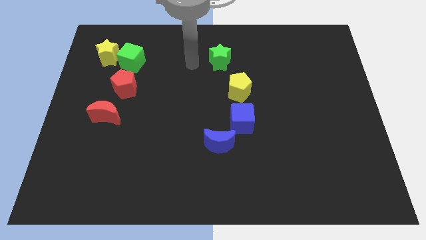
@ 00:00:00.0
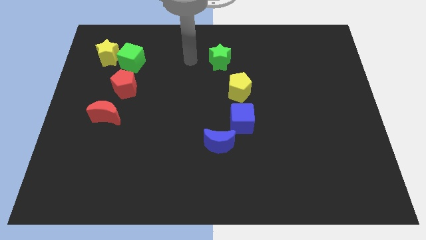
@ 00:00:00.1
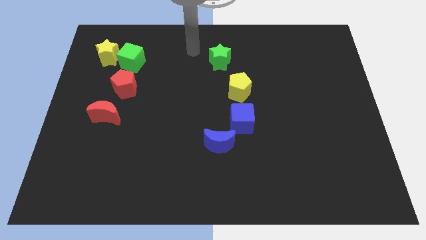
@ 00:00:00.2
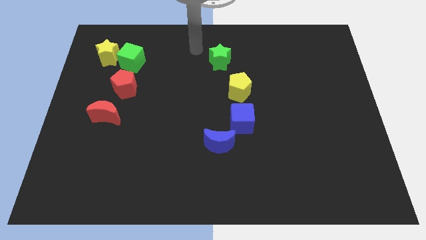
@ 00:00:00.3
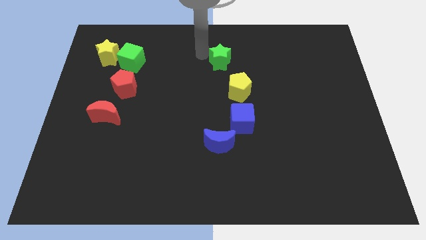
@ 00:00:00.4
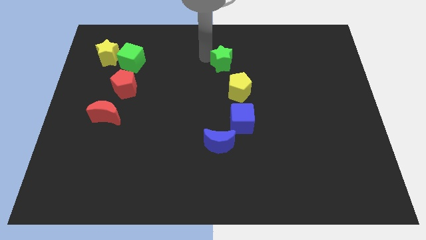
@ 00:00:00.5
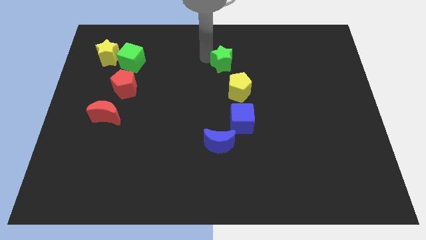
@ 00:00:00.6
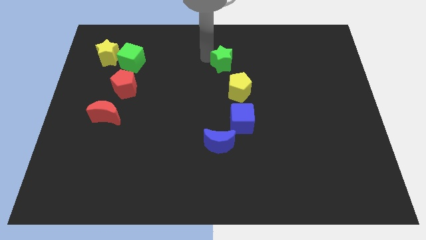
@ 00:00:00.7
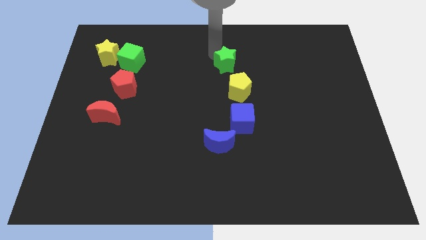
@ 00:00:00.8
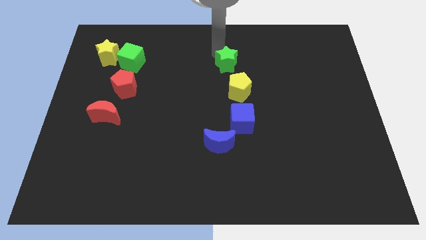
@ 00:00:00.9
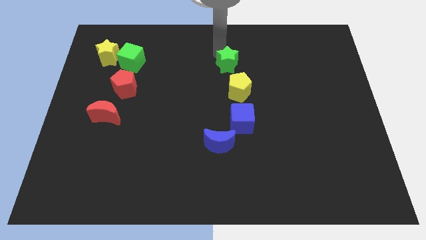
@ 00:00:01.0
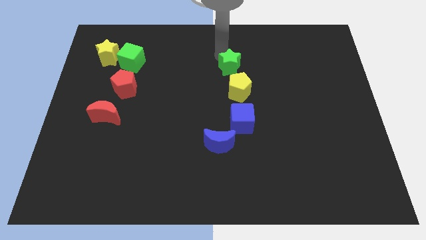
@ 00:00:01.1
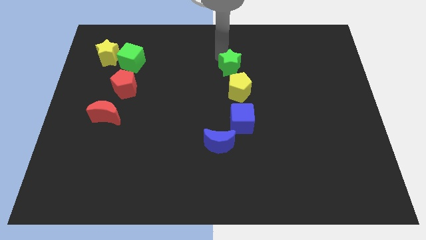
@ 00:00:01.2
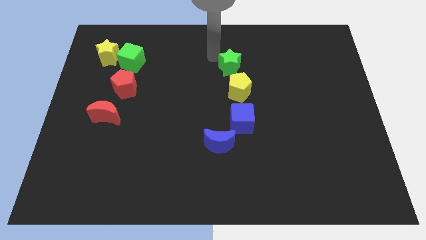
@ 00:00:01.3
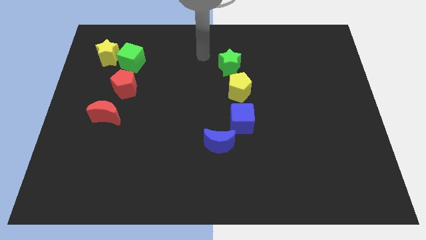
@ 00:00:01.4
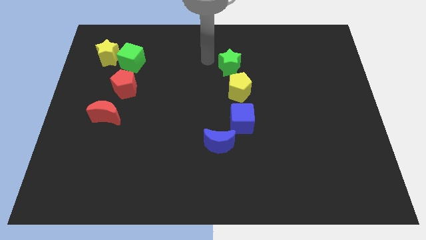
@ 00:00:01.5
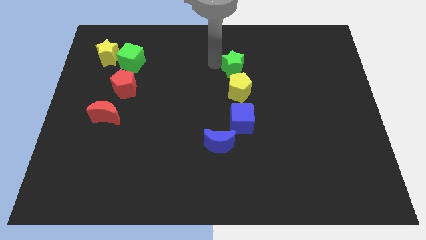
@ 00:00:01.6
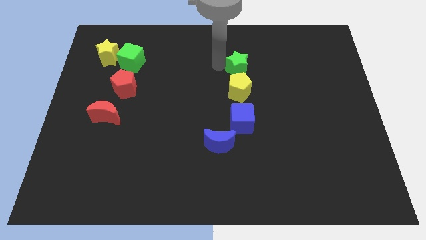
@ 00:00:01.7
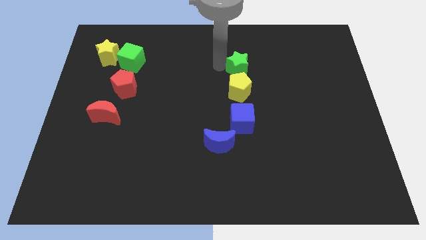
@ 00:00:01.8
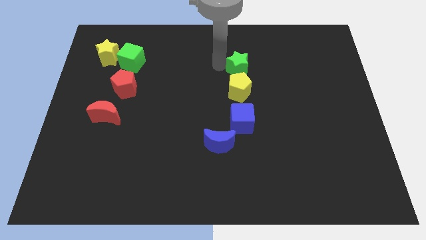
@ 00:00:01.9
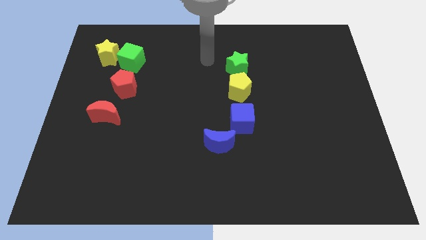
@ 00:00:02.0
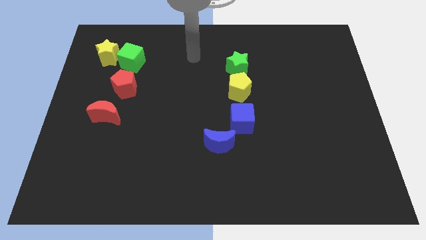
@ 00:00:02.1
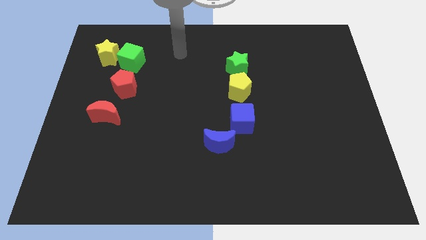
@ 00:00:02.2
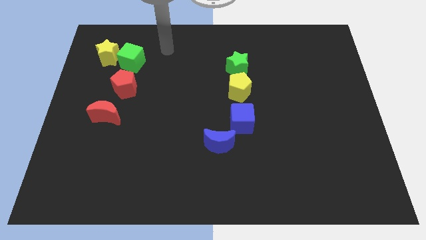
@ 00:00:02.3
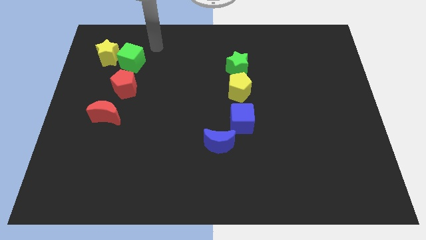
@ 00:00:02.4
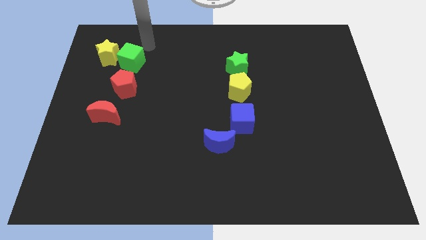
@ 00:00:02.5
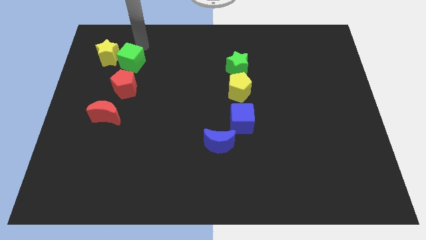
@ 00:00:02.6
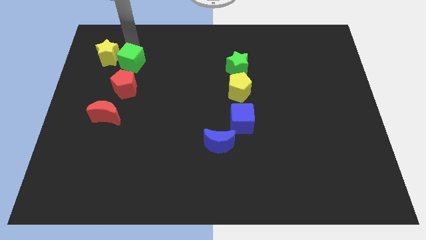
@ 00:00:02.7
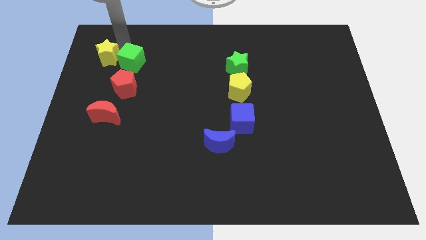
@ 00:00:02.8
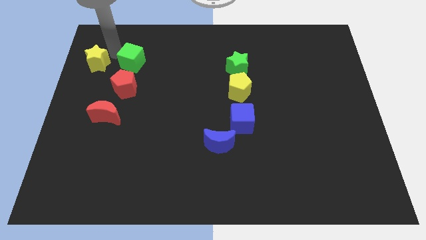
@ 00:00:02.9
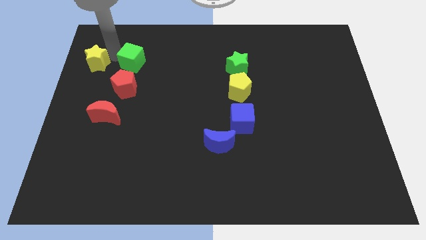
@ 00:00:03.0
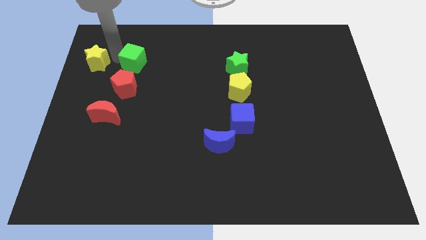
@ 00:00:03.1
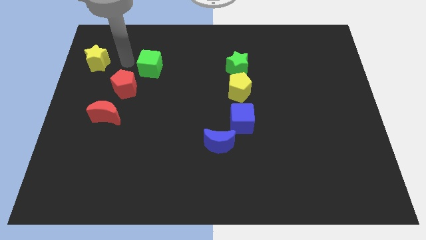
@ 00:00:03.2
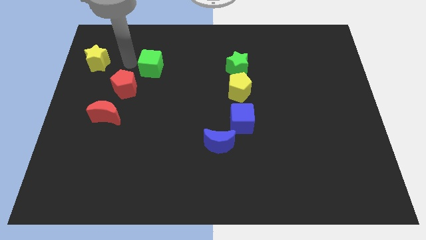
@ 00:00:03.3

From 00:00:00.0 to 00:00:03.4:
separate yellow star and green cube

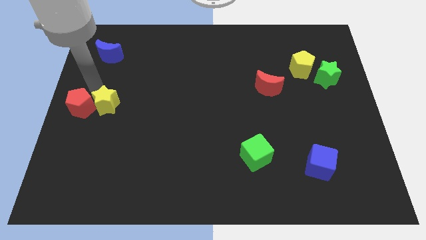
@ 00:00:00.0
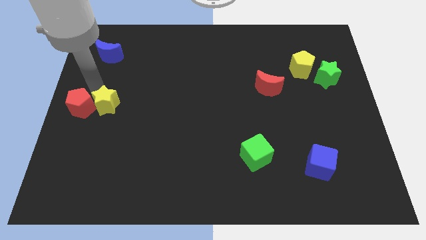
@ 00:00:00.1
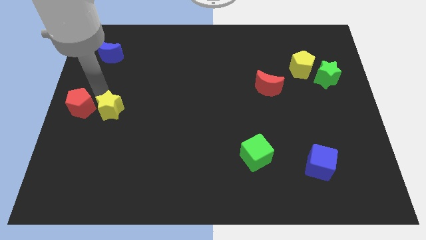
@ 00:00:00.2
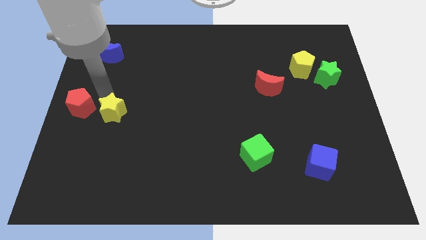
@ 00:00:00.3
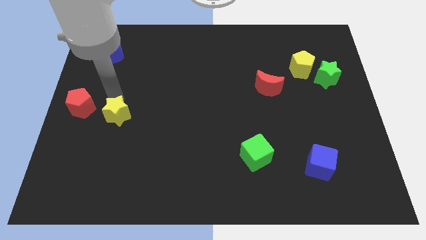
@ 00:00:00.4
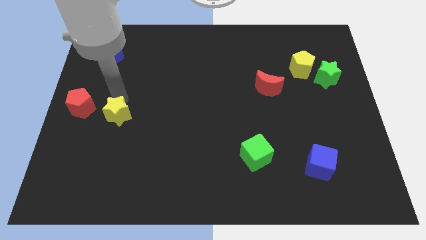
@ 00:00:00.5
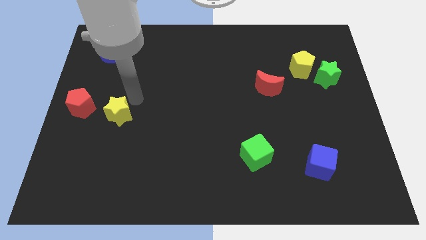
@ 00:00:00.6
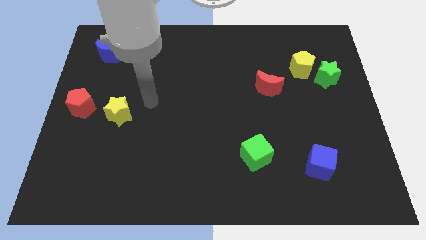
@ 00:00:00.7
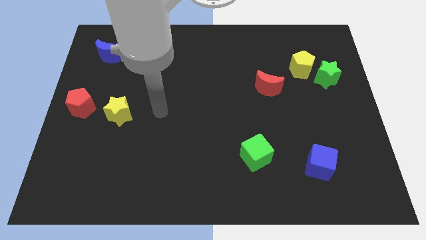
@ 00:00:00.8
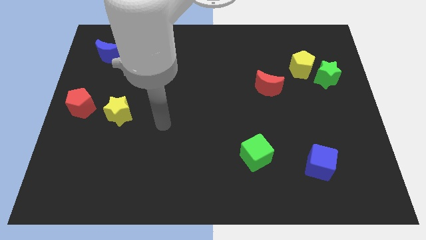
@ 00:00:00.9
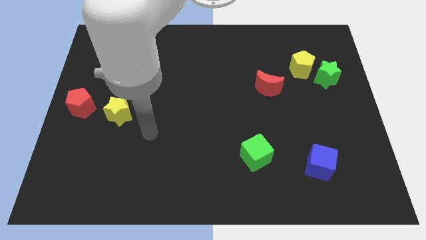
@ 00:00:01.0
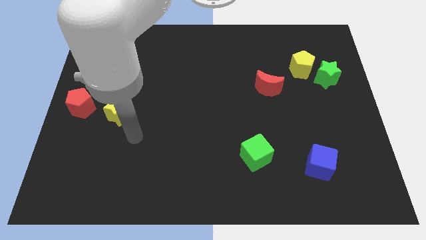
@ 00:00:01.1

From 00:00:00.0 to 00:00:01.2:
move the yellow star slightly apart from the red pentagon

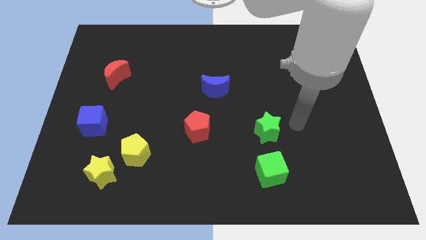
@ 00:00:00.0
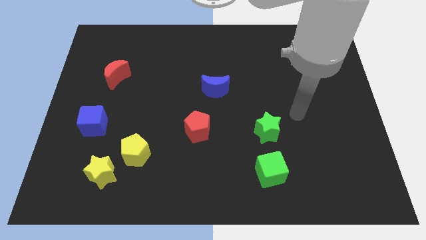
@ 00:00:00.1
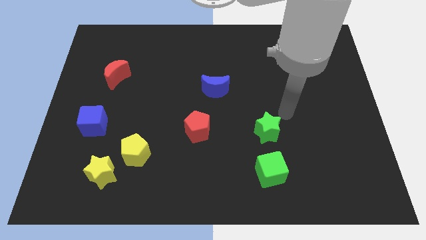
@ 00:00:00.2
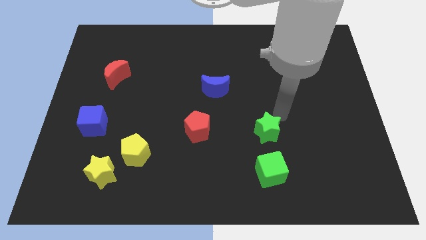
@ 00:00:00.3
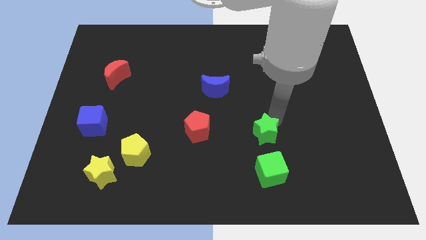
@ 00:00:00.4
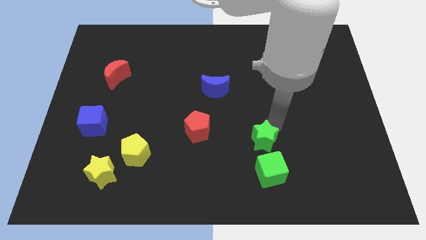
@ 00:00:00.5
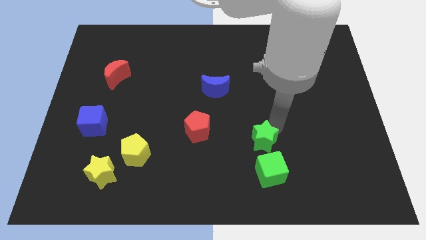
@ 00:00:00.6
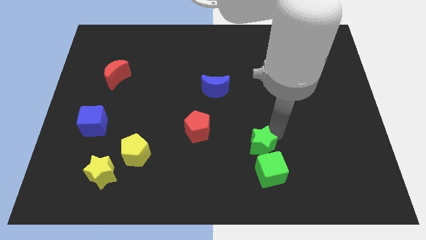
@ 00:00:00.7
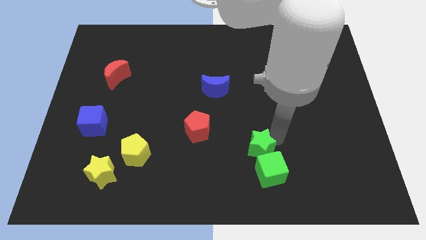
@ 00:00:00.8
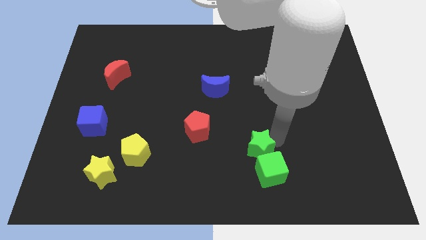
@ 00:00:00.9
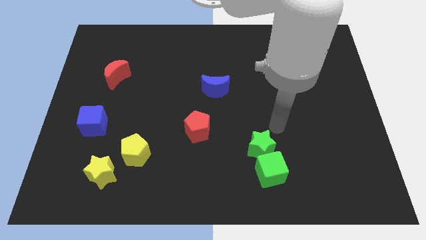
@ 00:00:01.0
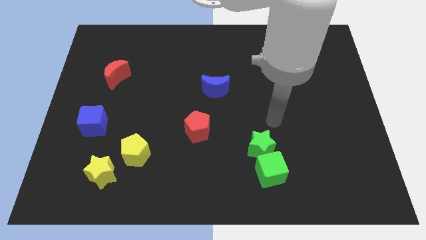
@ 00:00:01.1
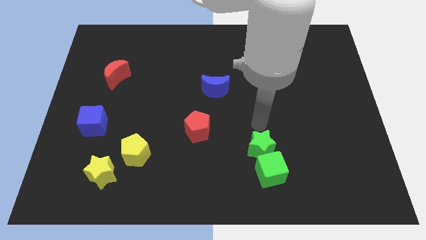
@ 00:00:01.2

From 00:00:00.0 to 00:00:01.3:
place the green star close to the green cube

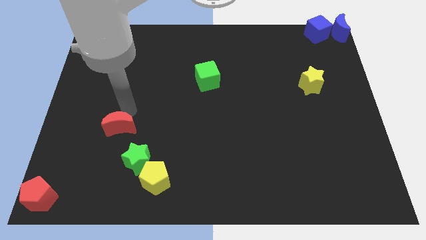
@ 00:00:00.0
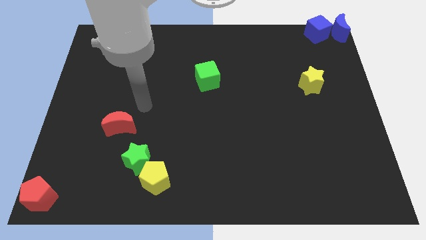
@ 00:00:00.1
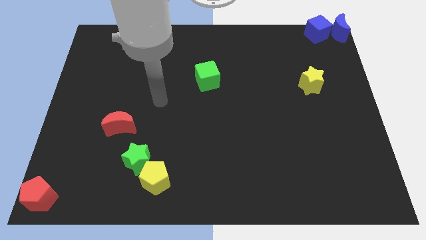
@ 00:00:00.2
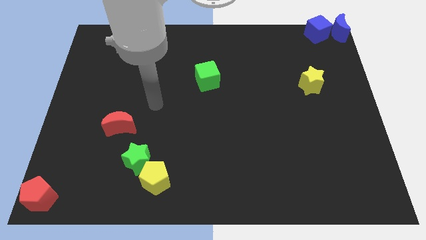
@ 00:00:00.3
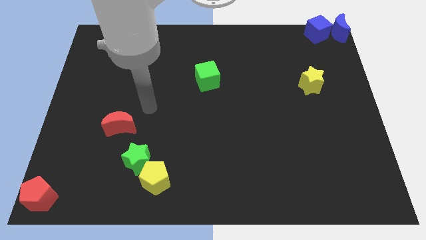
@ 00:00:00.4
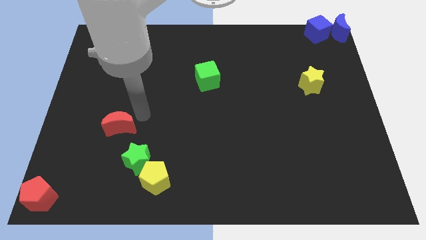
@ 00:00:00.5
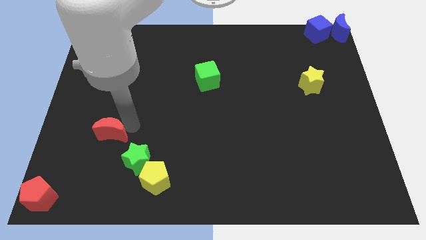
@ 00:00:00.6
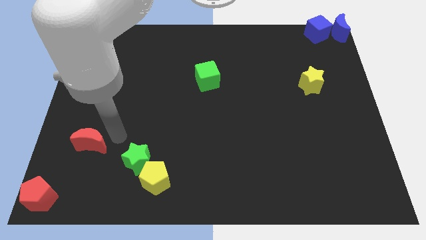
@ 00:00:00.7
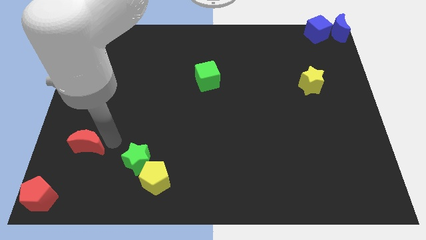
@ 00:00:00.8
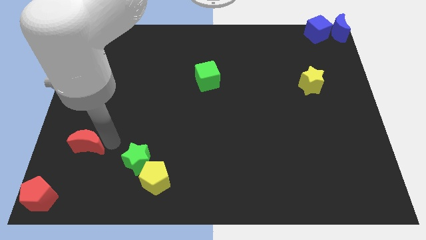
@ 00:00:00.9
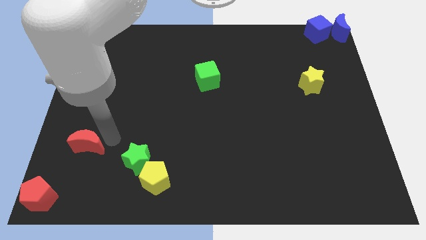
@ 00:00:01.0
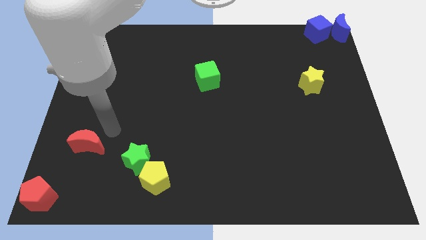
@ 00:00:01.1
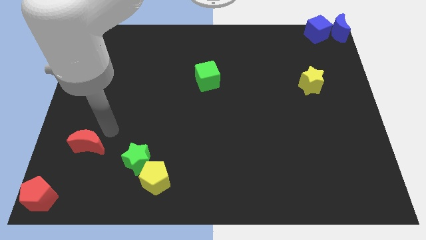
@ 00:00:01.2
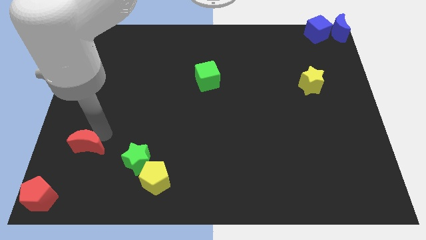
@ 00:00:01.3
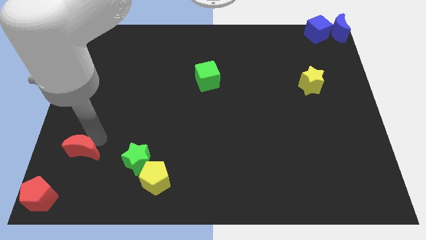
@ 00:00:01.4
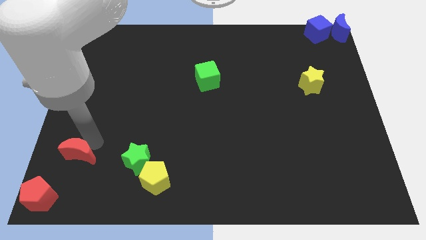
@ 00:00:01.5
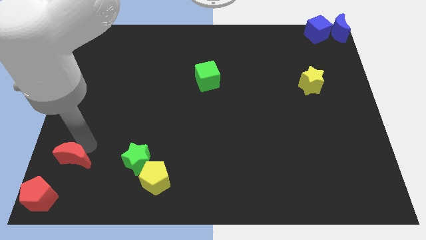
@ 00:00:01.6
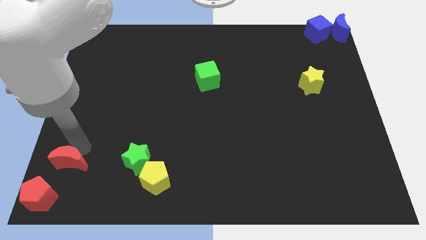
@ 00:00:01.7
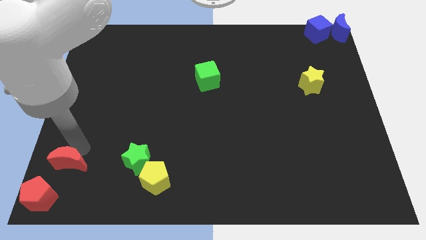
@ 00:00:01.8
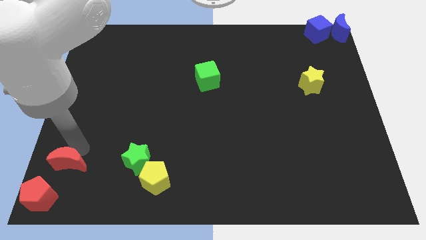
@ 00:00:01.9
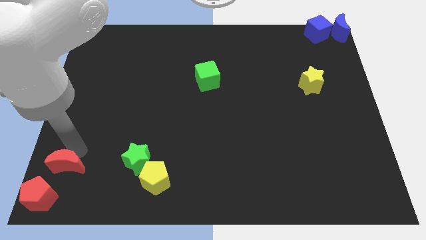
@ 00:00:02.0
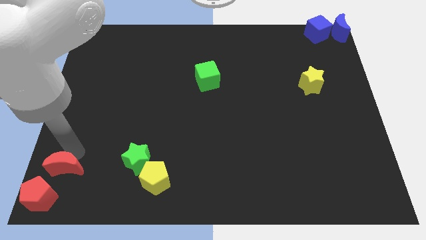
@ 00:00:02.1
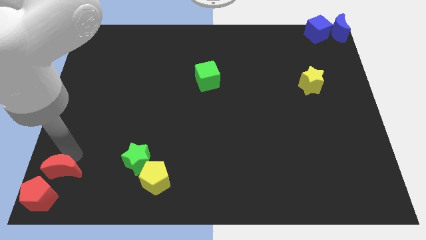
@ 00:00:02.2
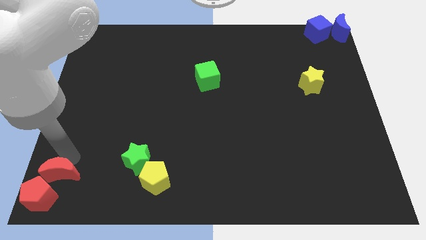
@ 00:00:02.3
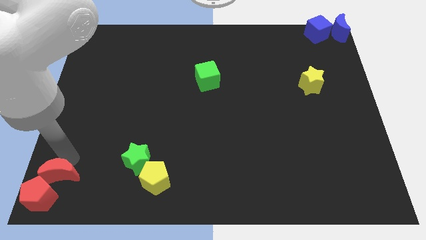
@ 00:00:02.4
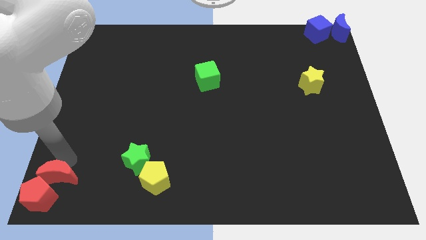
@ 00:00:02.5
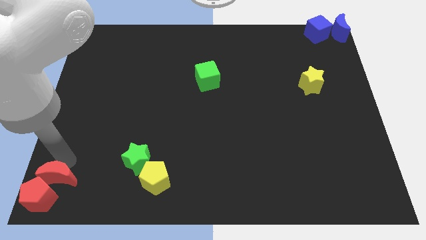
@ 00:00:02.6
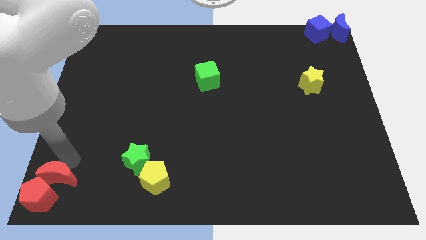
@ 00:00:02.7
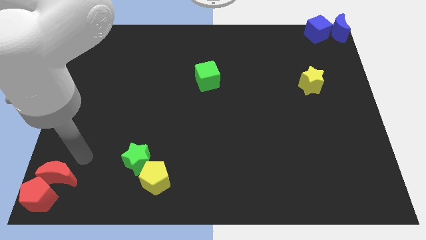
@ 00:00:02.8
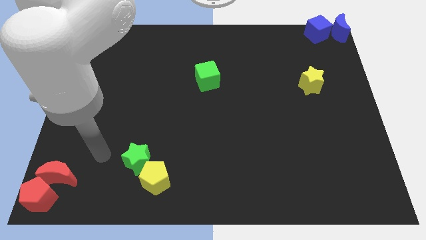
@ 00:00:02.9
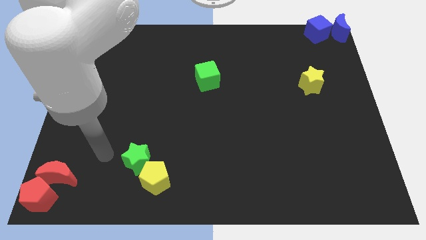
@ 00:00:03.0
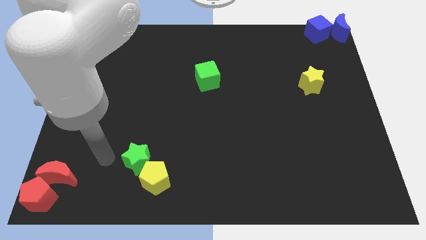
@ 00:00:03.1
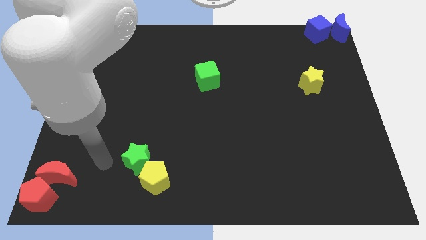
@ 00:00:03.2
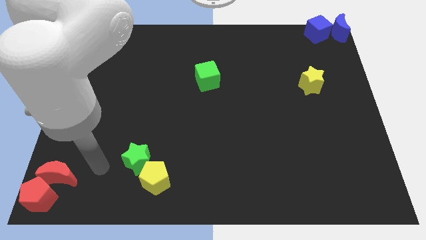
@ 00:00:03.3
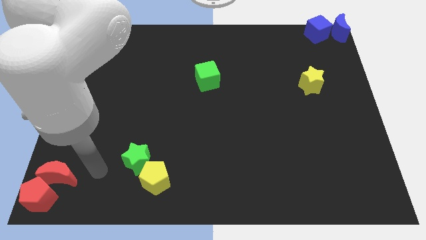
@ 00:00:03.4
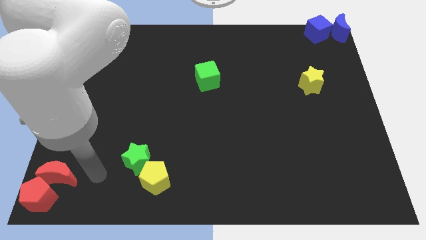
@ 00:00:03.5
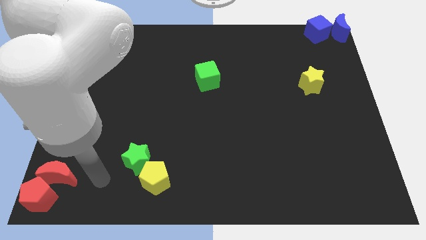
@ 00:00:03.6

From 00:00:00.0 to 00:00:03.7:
move the red crescent towards the red pentagon
